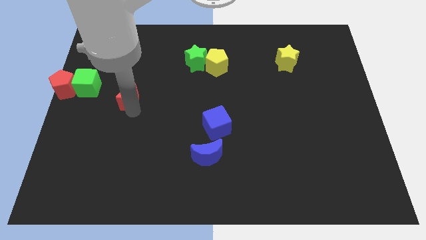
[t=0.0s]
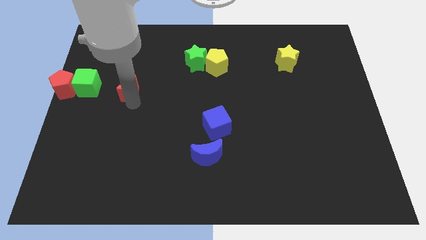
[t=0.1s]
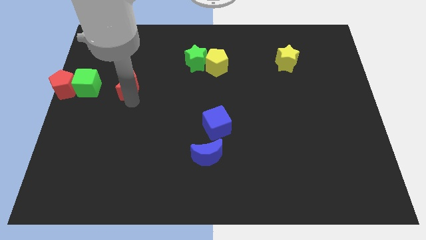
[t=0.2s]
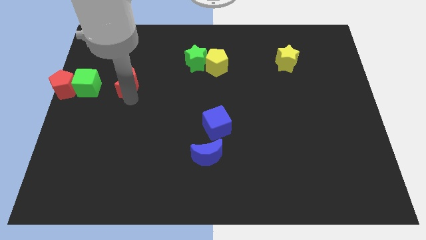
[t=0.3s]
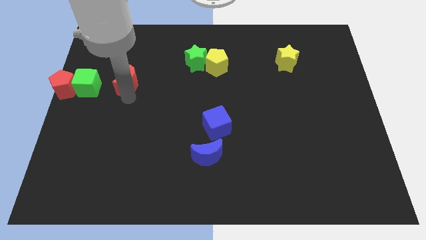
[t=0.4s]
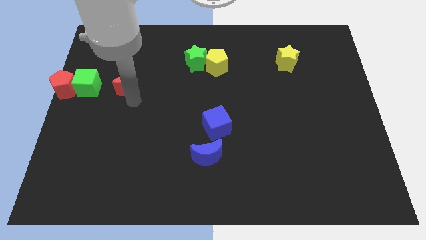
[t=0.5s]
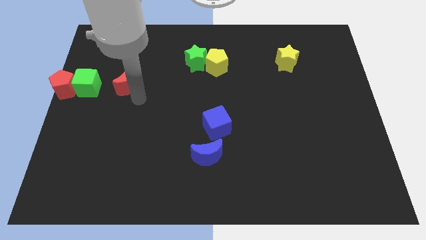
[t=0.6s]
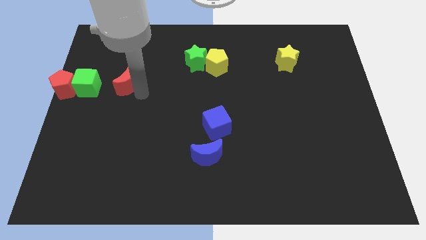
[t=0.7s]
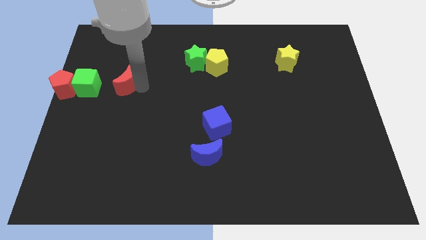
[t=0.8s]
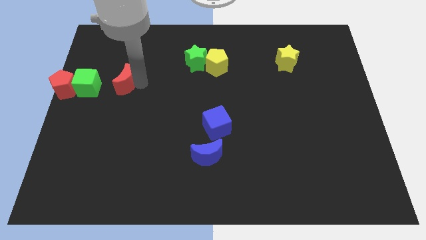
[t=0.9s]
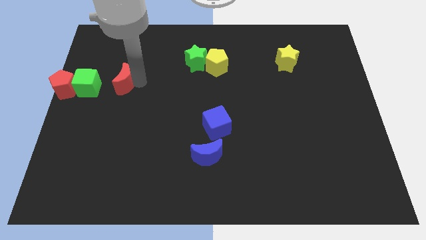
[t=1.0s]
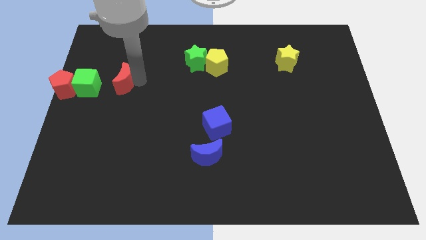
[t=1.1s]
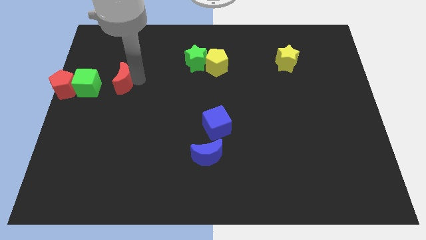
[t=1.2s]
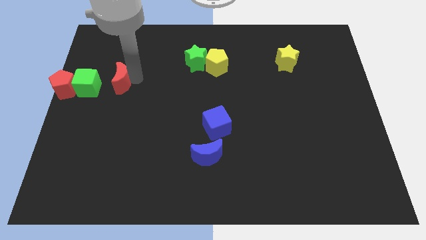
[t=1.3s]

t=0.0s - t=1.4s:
place the red moon right to the green cube
